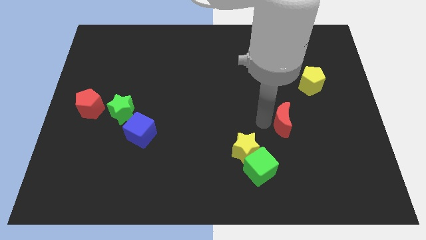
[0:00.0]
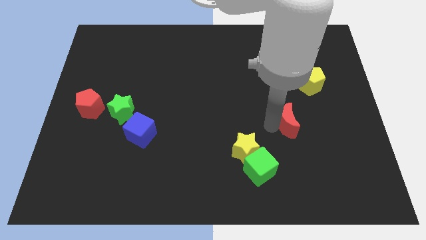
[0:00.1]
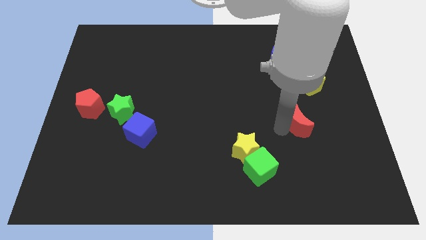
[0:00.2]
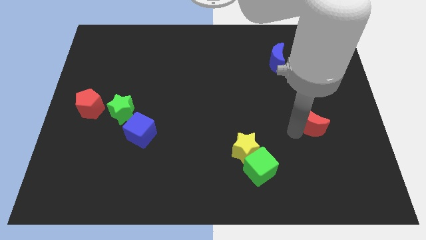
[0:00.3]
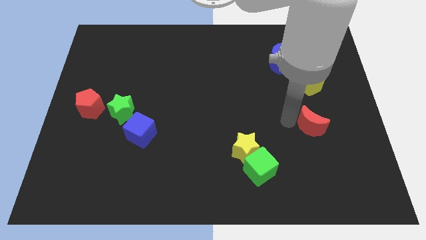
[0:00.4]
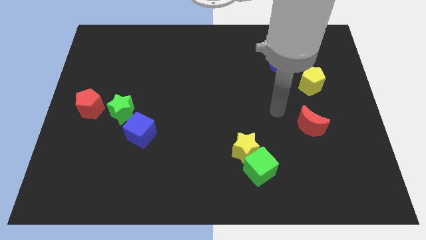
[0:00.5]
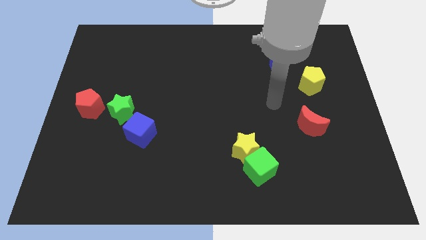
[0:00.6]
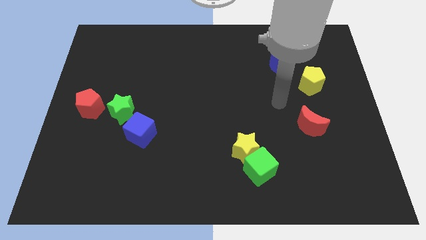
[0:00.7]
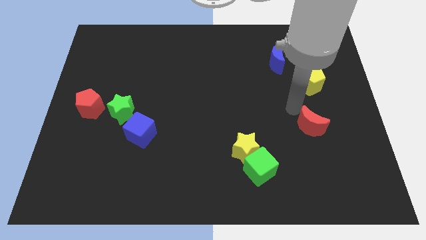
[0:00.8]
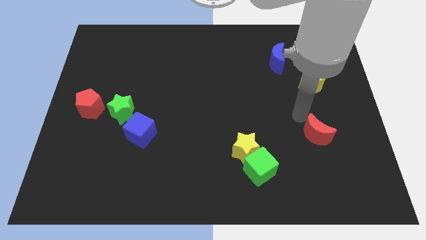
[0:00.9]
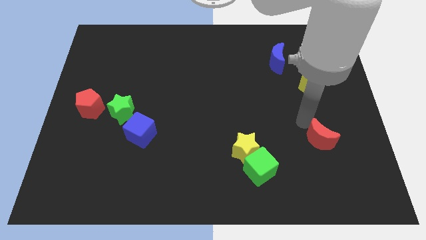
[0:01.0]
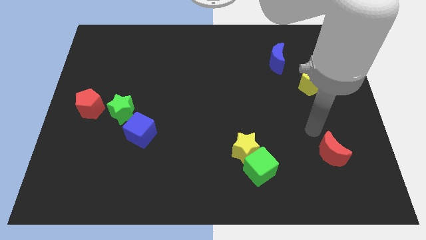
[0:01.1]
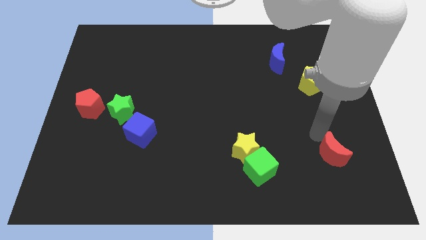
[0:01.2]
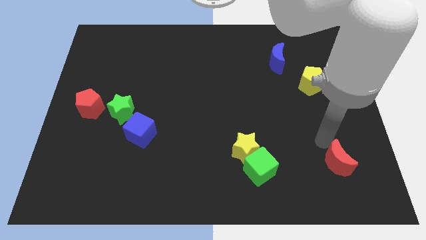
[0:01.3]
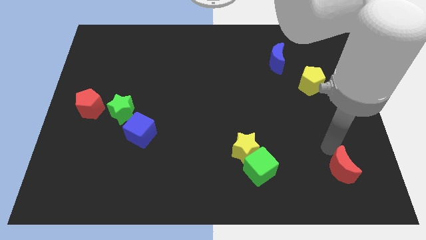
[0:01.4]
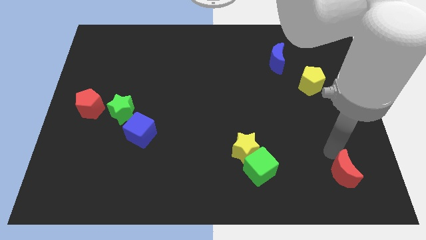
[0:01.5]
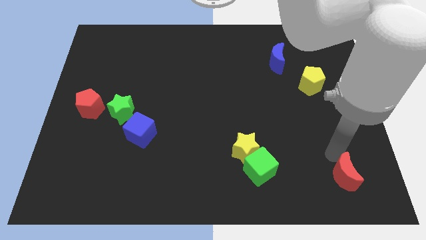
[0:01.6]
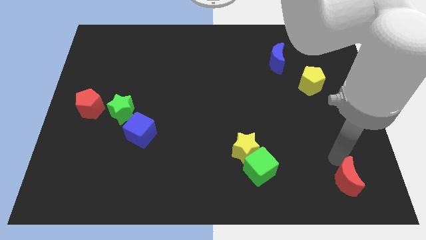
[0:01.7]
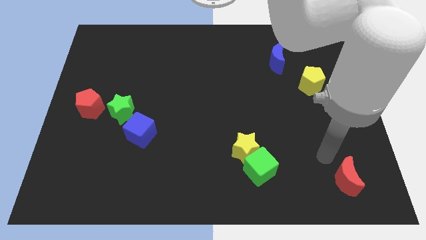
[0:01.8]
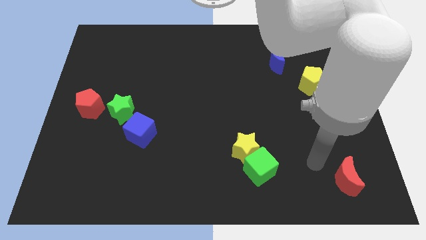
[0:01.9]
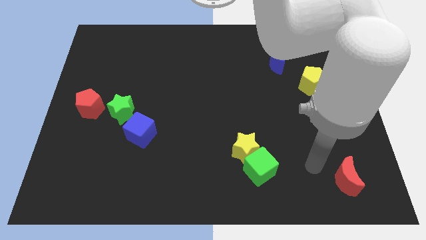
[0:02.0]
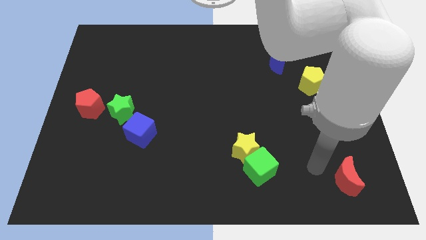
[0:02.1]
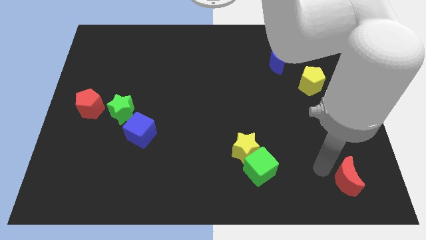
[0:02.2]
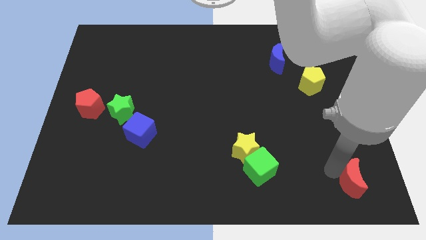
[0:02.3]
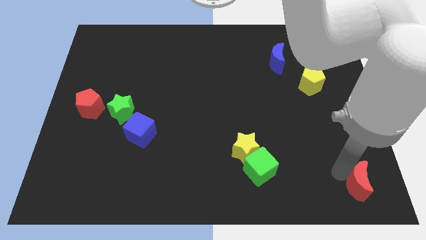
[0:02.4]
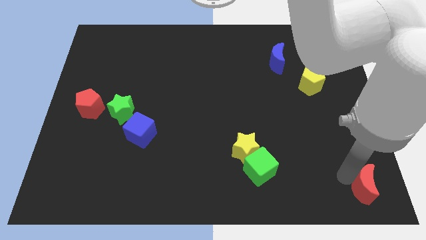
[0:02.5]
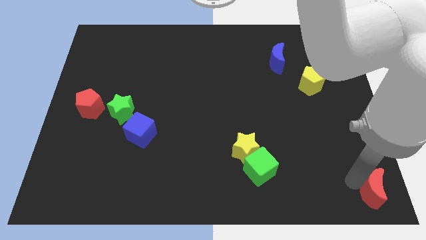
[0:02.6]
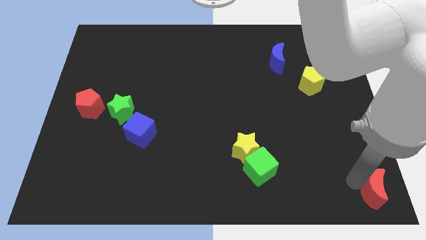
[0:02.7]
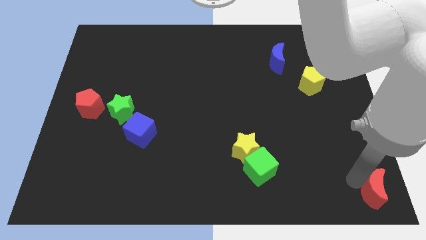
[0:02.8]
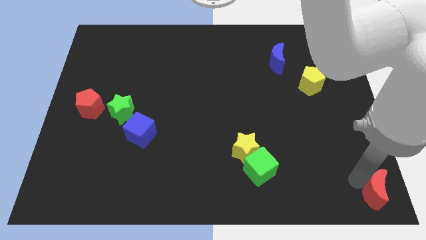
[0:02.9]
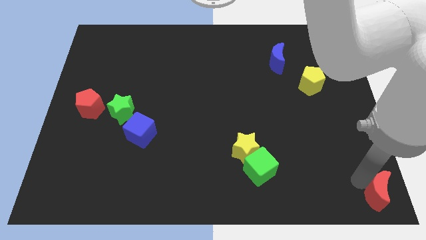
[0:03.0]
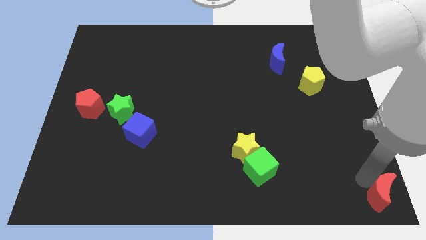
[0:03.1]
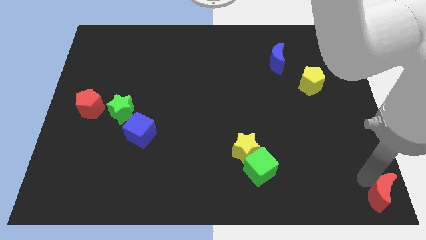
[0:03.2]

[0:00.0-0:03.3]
place the red moon to the bottom right

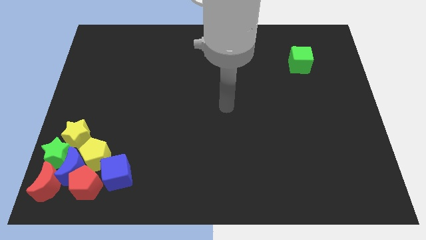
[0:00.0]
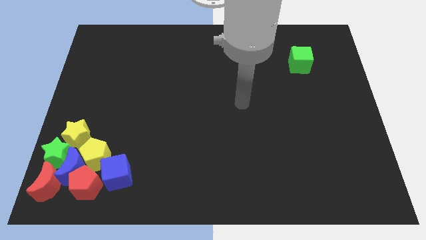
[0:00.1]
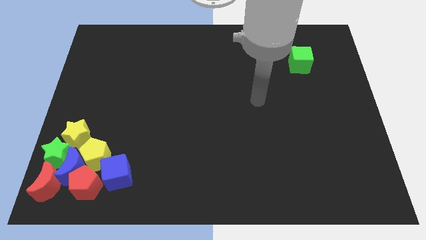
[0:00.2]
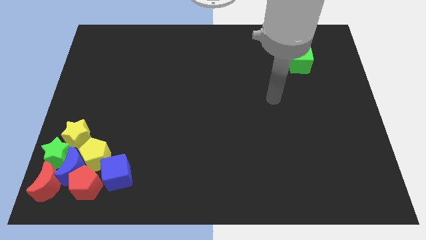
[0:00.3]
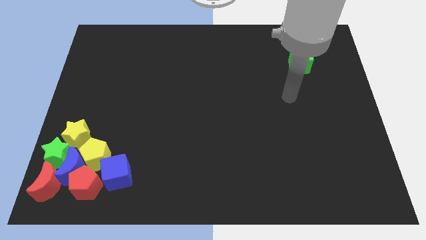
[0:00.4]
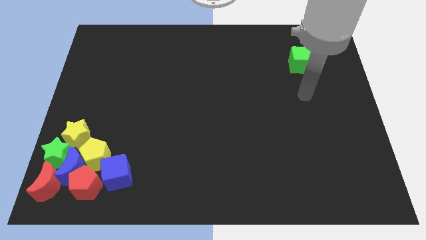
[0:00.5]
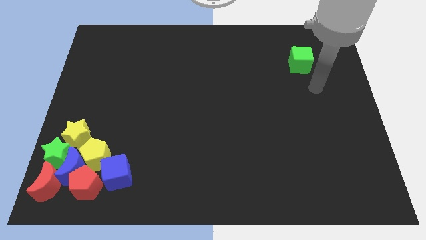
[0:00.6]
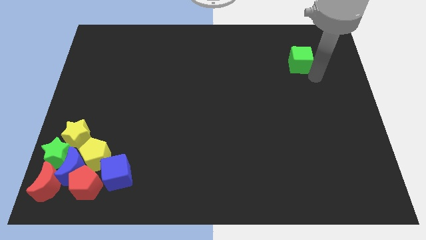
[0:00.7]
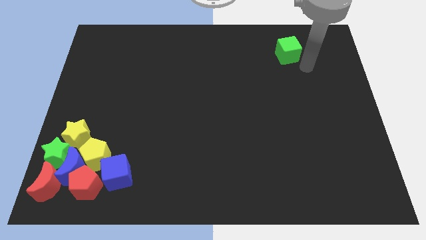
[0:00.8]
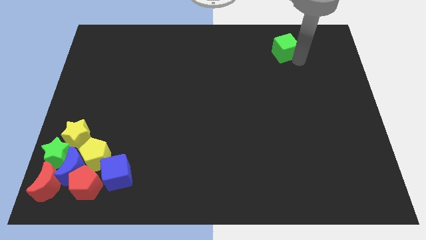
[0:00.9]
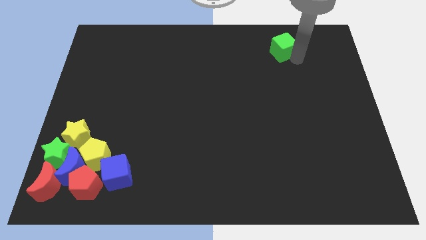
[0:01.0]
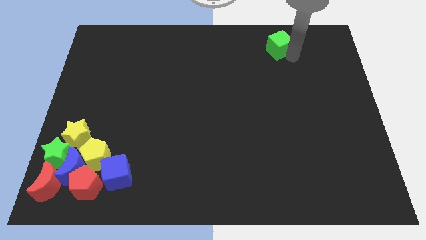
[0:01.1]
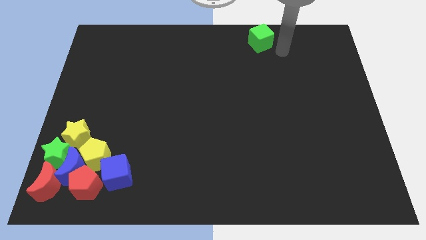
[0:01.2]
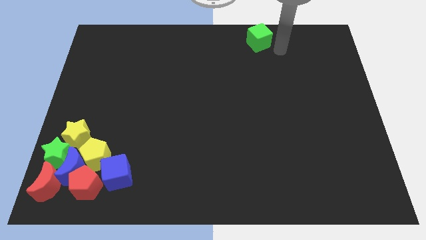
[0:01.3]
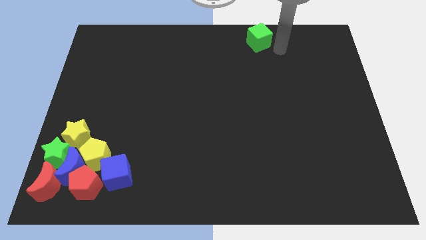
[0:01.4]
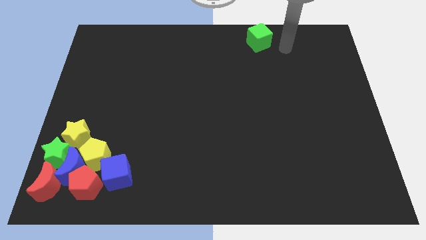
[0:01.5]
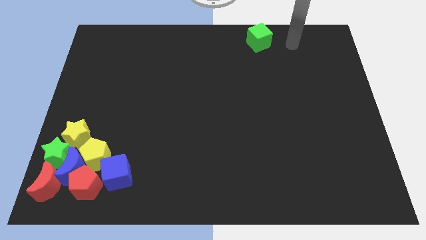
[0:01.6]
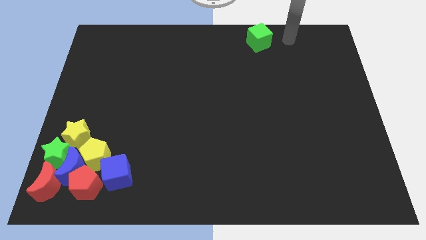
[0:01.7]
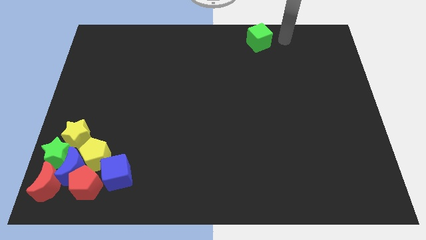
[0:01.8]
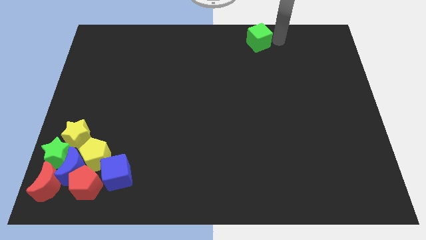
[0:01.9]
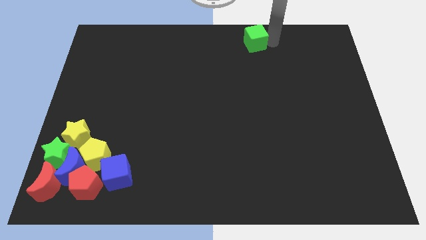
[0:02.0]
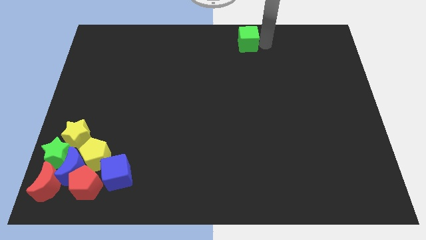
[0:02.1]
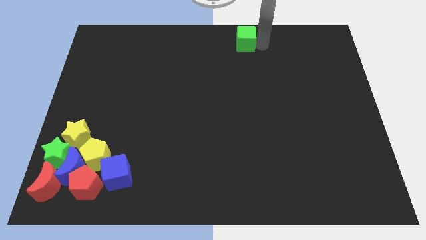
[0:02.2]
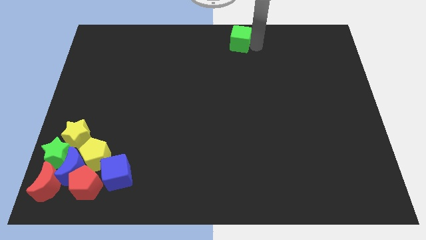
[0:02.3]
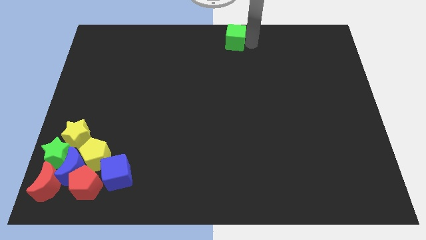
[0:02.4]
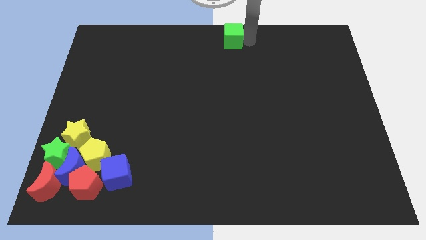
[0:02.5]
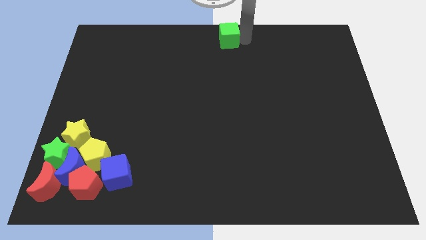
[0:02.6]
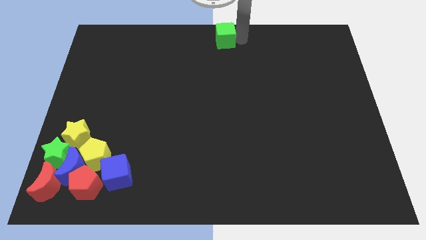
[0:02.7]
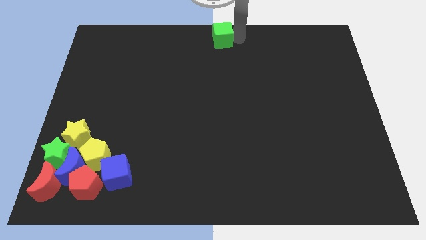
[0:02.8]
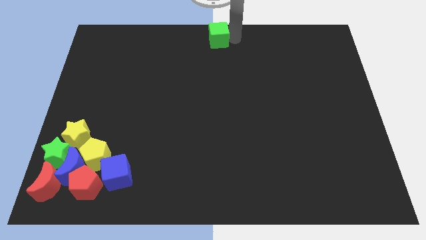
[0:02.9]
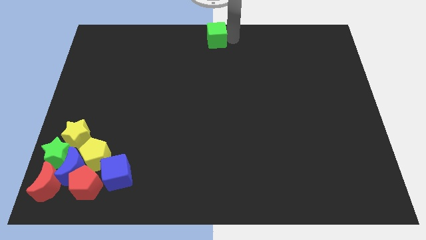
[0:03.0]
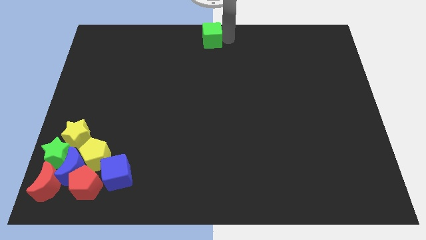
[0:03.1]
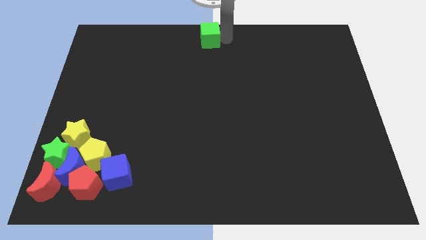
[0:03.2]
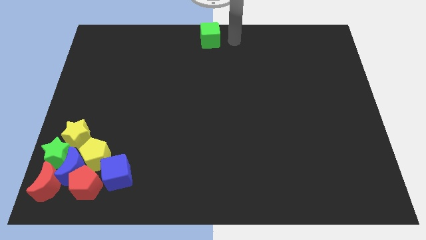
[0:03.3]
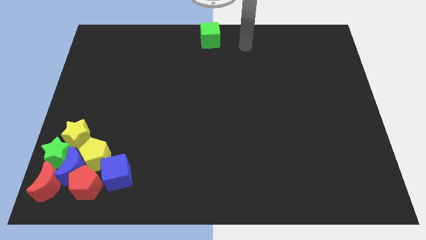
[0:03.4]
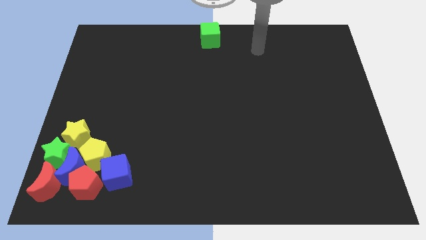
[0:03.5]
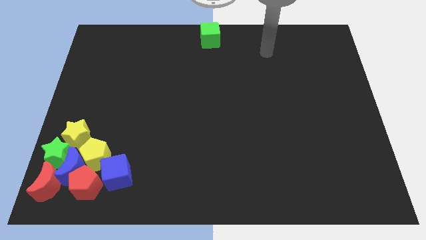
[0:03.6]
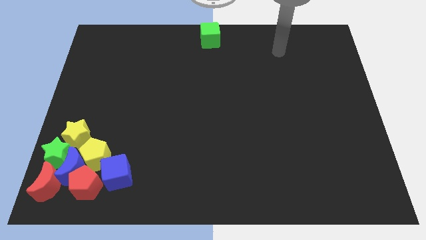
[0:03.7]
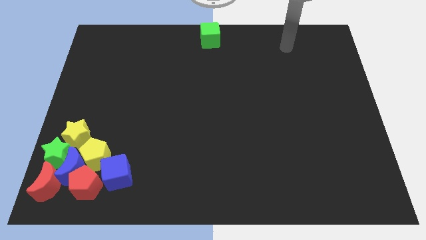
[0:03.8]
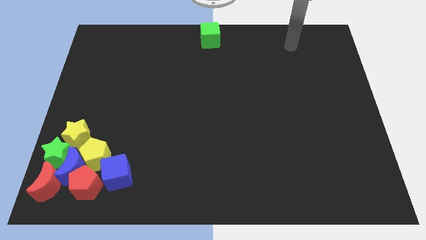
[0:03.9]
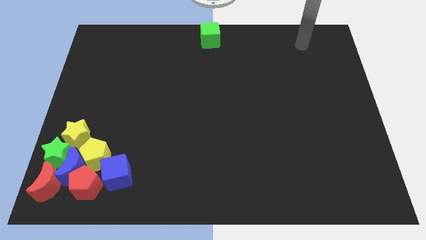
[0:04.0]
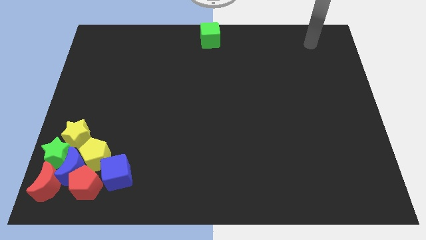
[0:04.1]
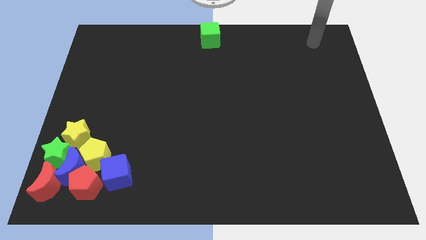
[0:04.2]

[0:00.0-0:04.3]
place the green cube to the top center of the board

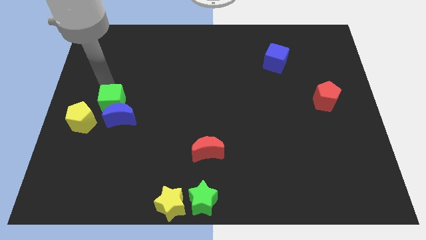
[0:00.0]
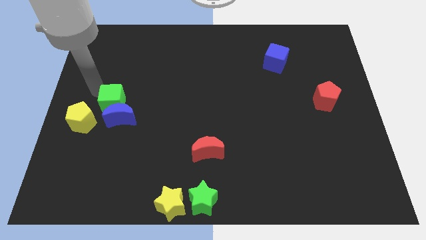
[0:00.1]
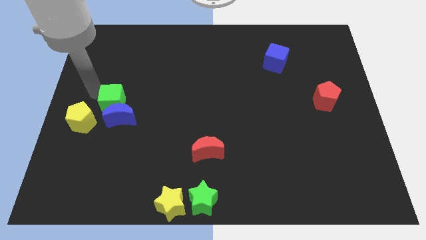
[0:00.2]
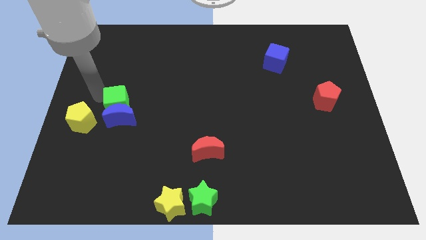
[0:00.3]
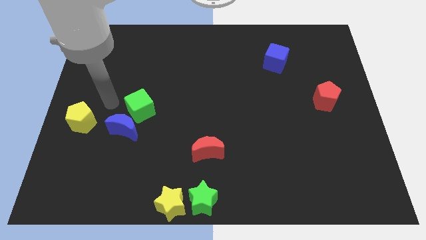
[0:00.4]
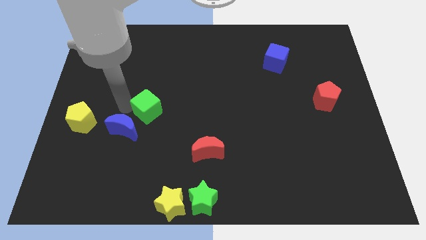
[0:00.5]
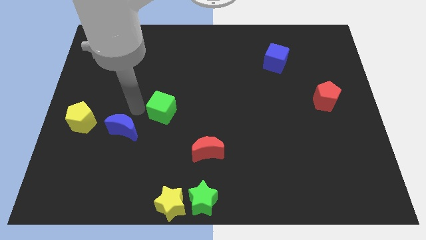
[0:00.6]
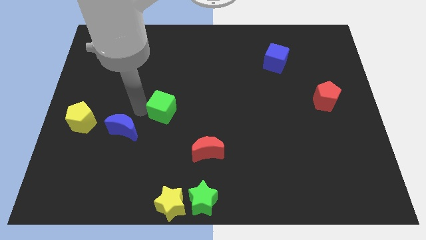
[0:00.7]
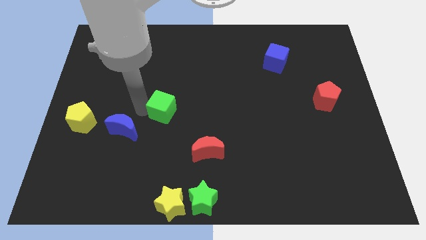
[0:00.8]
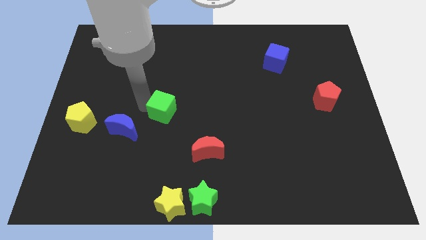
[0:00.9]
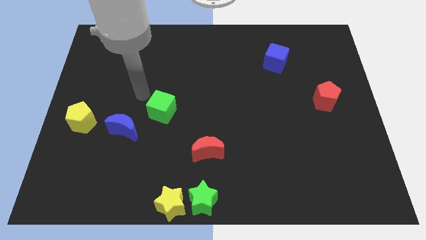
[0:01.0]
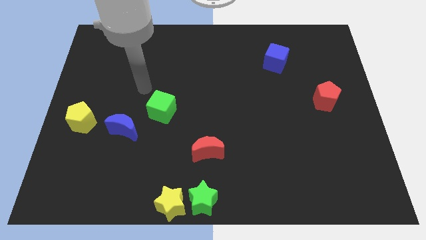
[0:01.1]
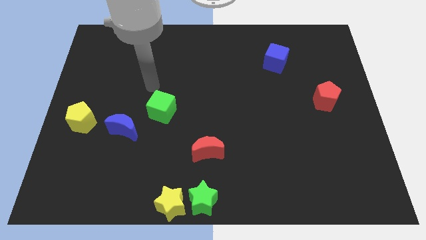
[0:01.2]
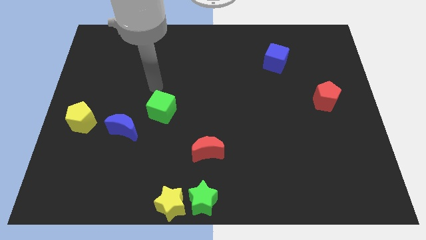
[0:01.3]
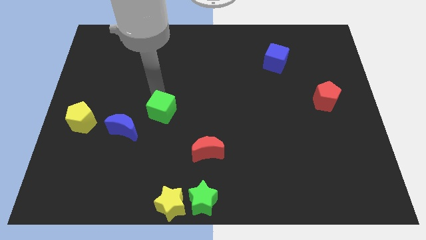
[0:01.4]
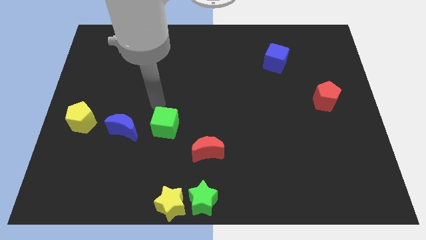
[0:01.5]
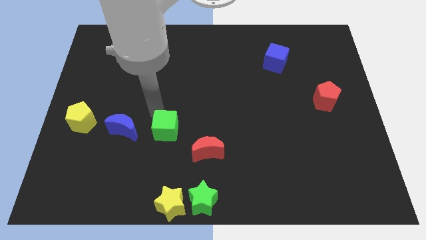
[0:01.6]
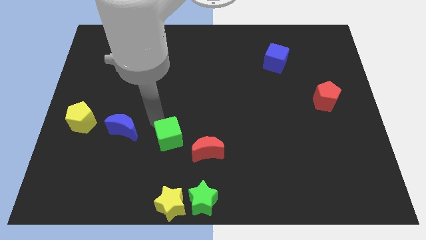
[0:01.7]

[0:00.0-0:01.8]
place the green cube in between blue crescent and red crescent
